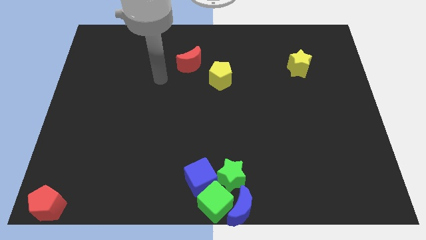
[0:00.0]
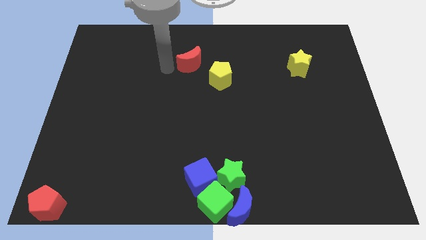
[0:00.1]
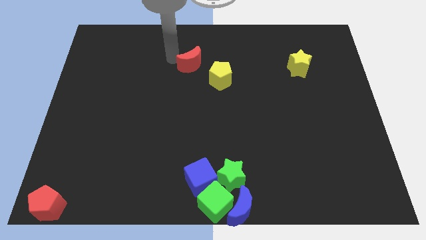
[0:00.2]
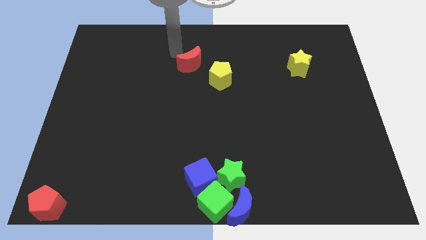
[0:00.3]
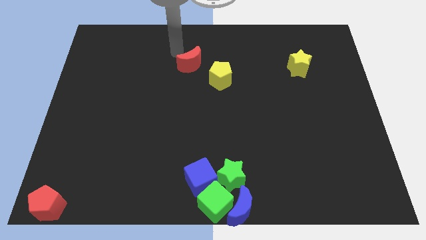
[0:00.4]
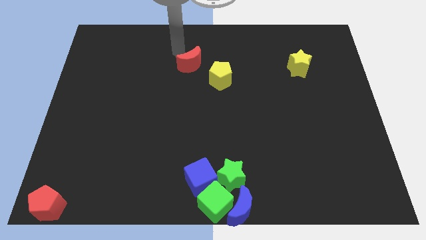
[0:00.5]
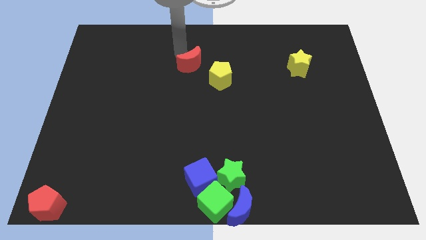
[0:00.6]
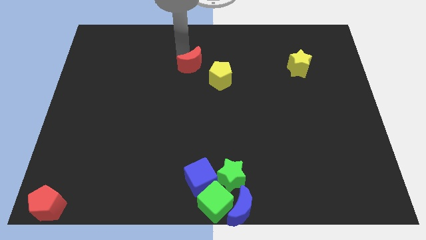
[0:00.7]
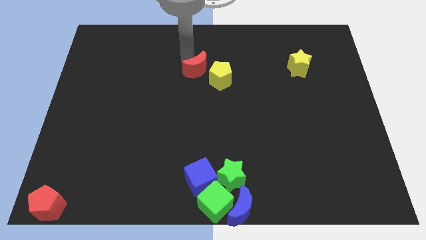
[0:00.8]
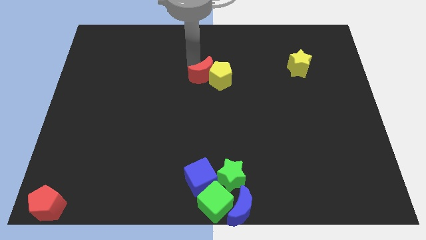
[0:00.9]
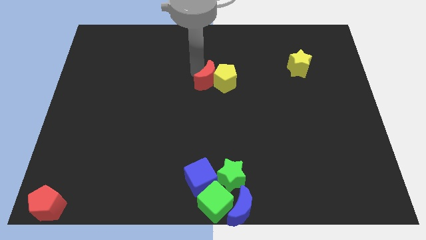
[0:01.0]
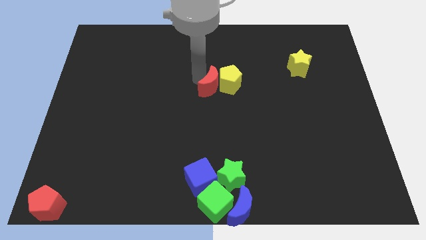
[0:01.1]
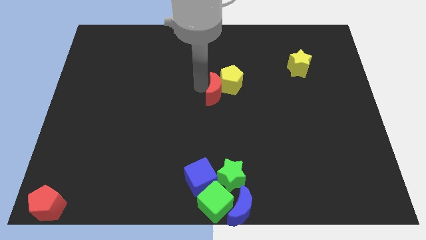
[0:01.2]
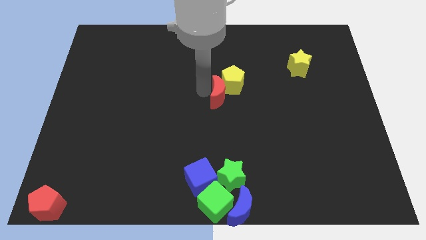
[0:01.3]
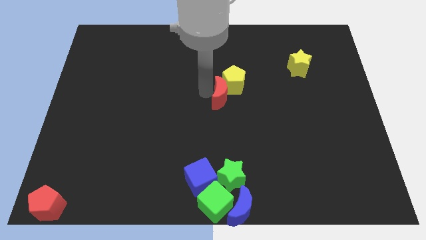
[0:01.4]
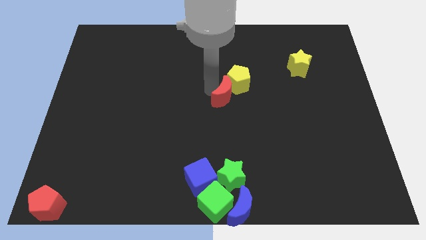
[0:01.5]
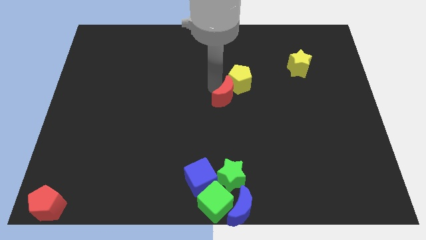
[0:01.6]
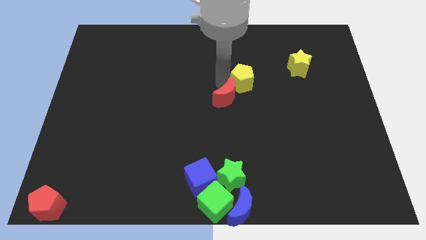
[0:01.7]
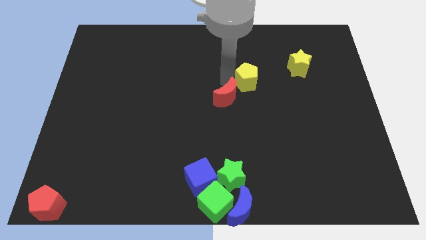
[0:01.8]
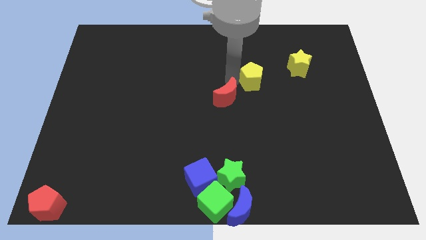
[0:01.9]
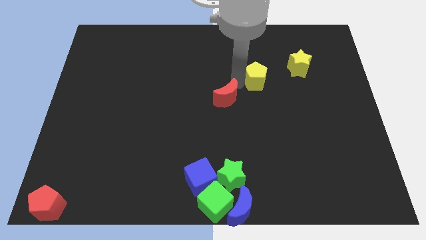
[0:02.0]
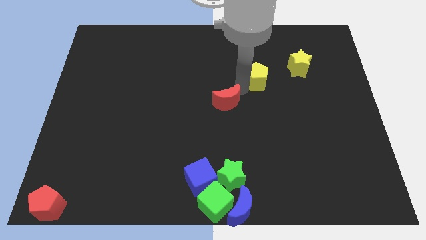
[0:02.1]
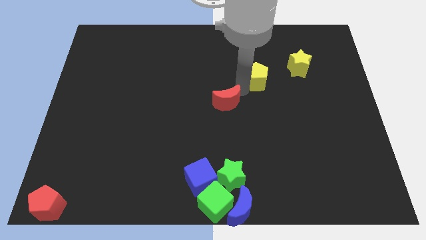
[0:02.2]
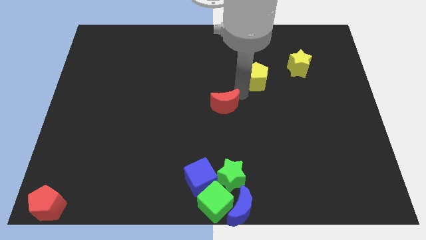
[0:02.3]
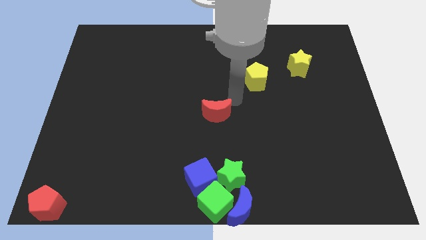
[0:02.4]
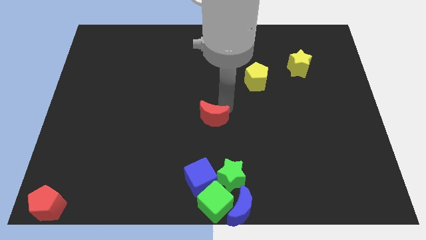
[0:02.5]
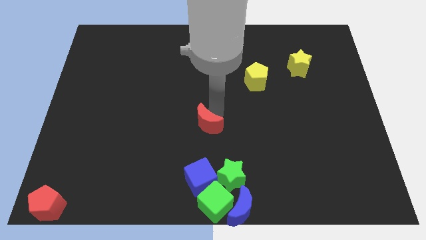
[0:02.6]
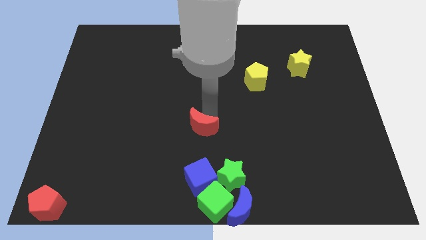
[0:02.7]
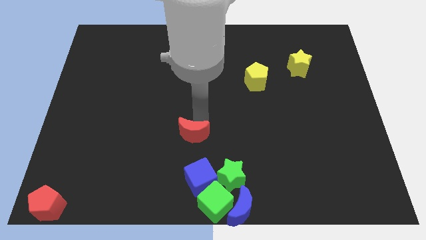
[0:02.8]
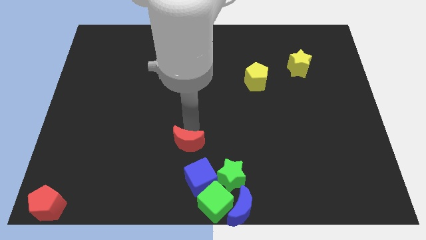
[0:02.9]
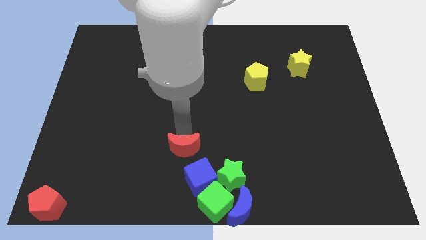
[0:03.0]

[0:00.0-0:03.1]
separate red moon from yellow pentagon

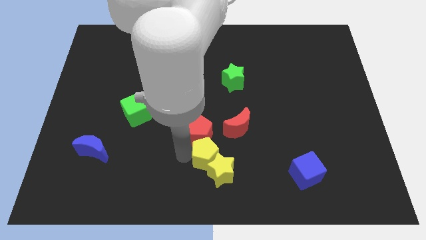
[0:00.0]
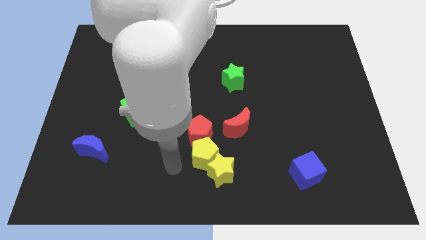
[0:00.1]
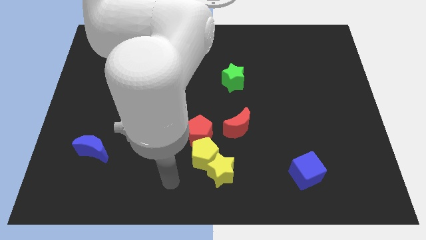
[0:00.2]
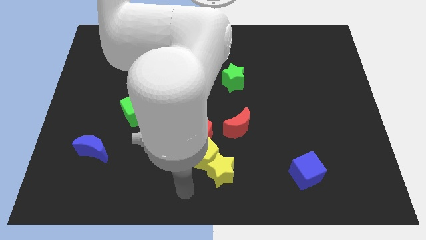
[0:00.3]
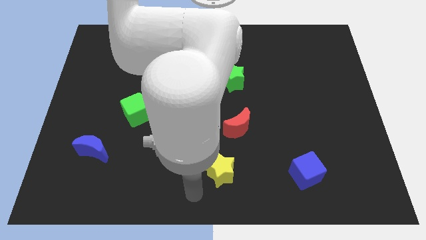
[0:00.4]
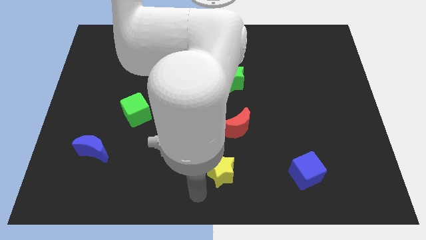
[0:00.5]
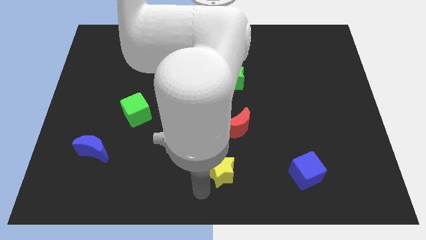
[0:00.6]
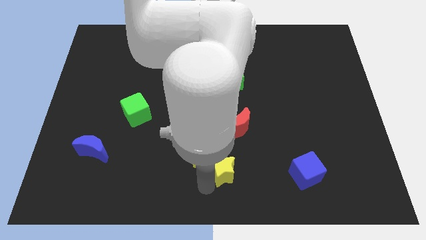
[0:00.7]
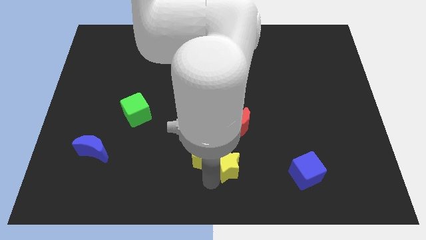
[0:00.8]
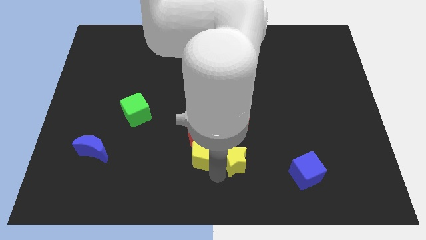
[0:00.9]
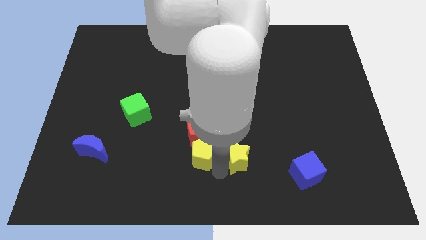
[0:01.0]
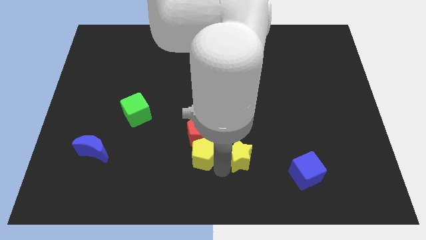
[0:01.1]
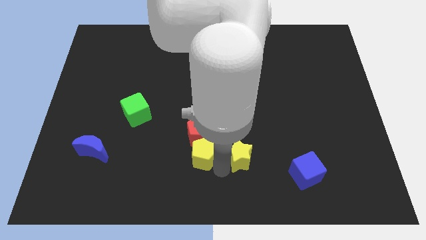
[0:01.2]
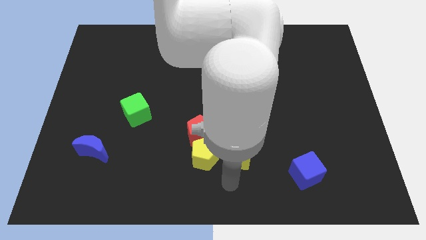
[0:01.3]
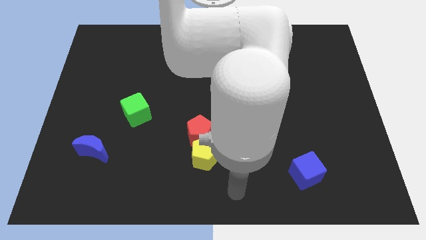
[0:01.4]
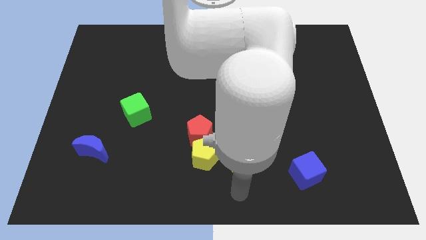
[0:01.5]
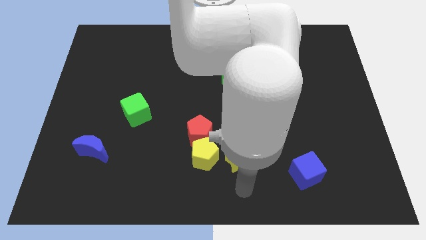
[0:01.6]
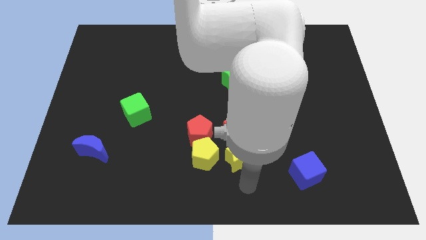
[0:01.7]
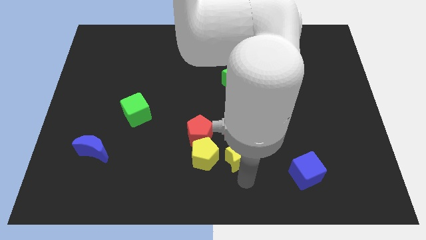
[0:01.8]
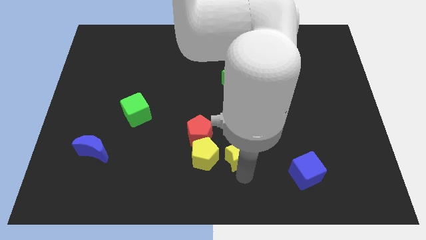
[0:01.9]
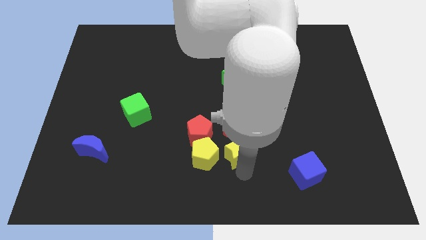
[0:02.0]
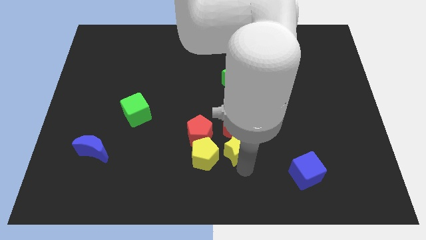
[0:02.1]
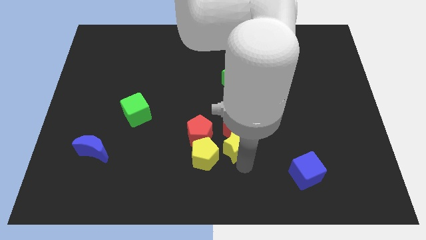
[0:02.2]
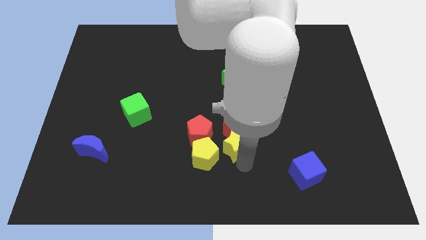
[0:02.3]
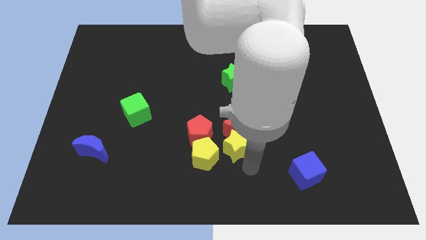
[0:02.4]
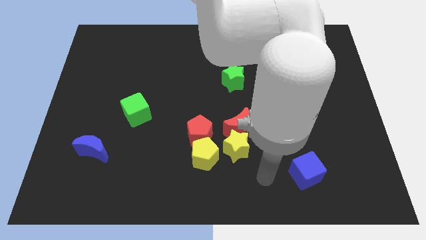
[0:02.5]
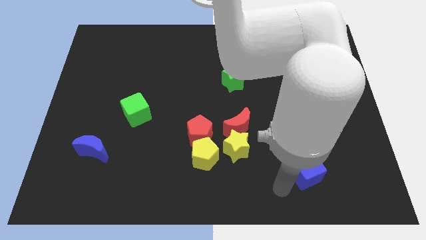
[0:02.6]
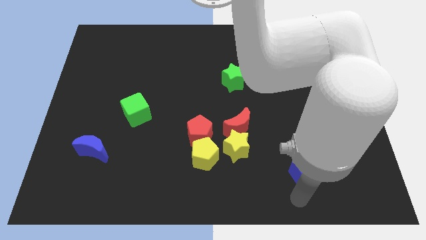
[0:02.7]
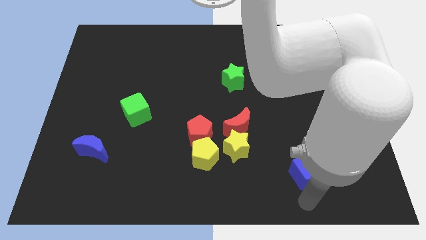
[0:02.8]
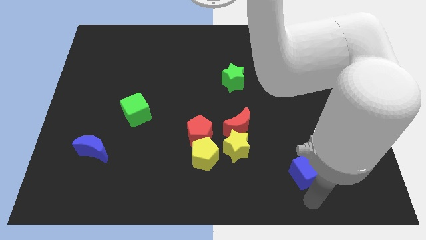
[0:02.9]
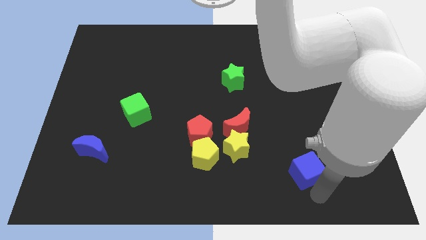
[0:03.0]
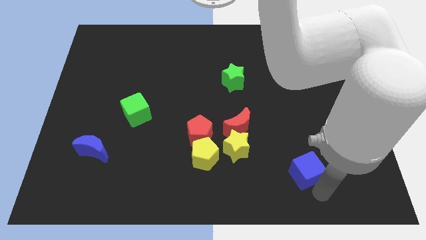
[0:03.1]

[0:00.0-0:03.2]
move the yellow star into the red crescent

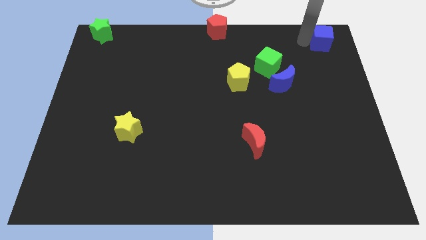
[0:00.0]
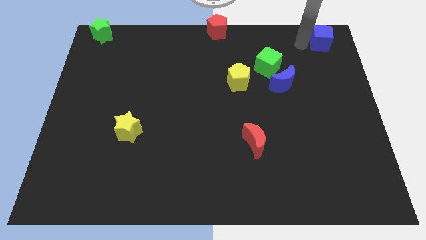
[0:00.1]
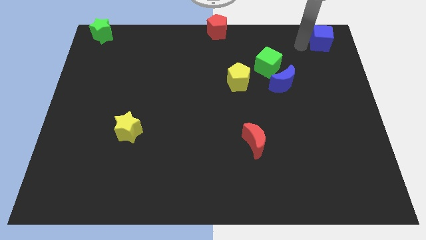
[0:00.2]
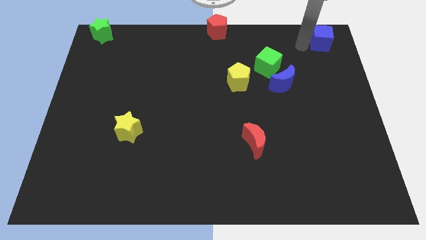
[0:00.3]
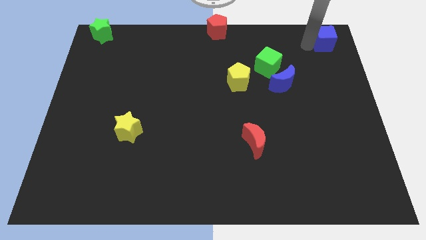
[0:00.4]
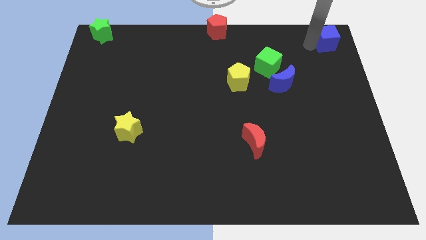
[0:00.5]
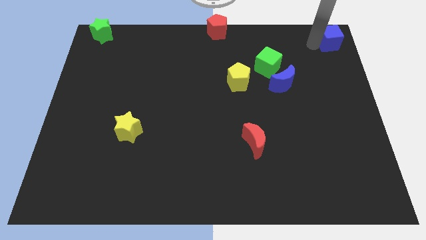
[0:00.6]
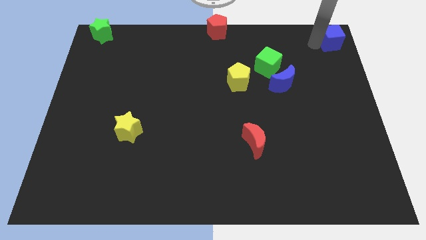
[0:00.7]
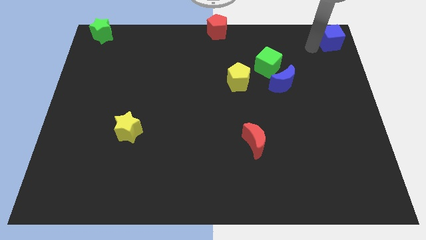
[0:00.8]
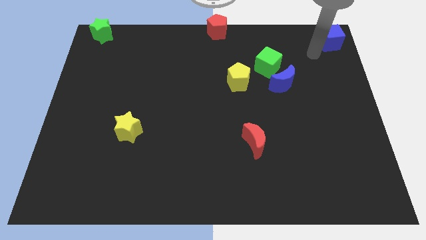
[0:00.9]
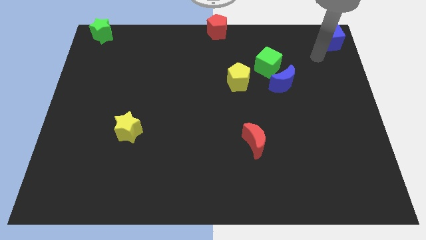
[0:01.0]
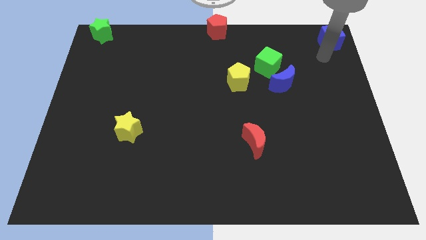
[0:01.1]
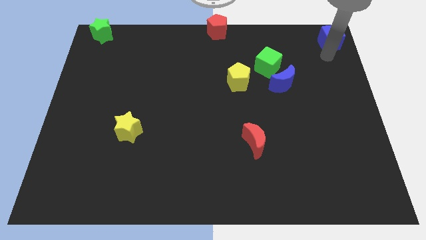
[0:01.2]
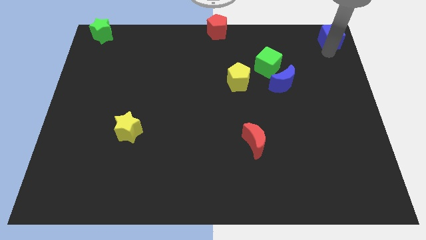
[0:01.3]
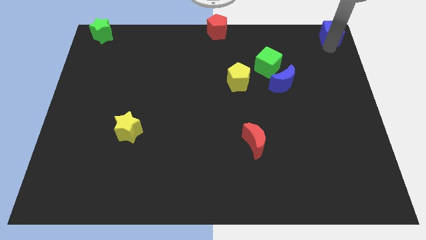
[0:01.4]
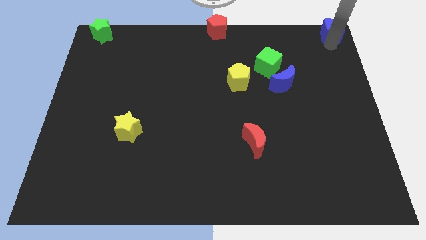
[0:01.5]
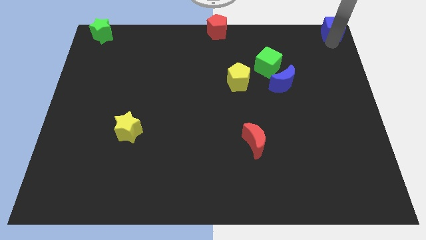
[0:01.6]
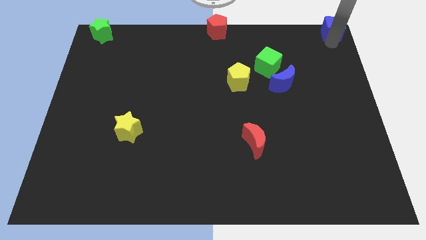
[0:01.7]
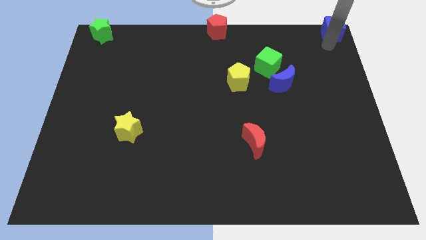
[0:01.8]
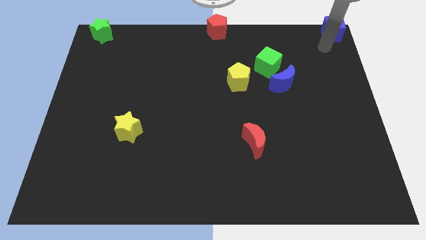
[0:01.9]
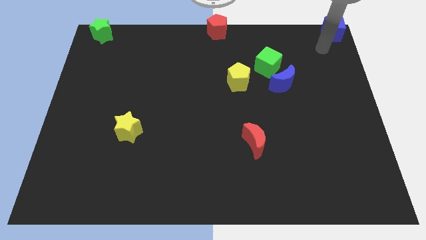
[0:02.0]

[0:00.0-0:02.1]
place the blue cube to the top right corner of the board

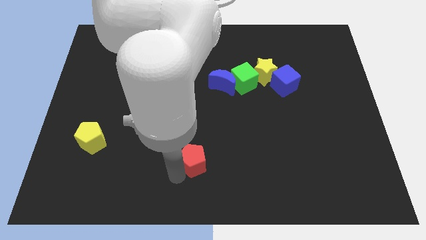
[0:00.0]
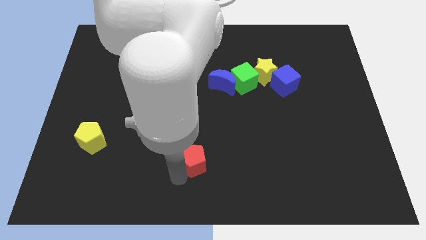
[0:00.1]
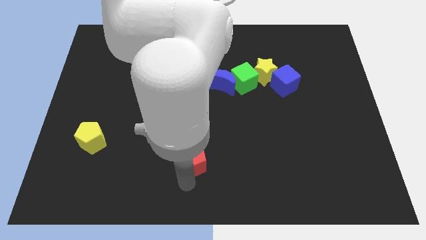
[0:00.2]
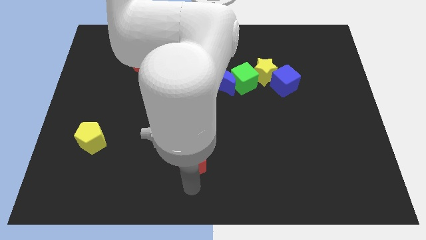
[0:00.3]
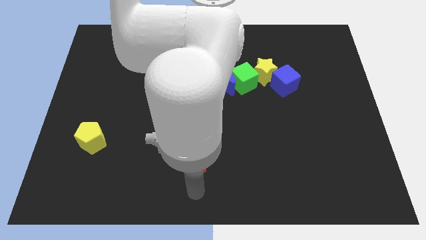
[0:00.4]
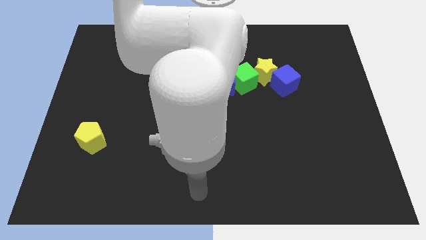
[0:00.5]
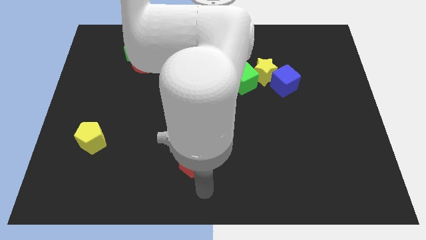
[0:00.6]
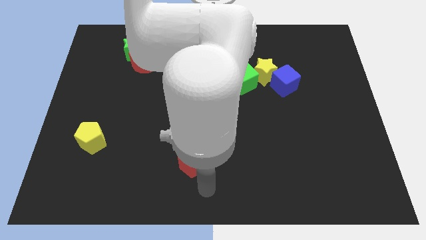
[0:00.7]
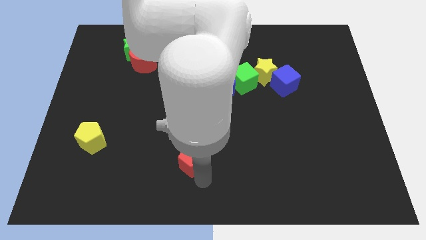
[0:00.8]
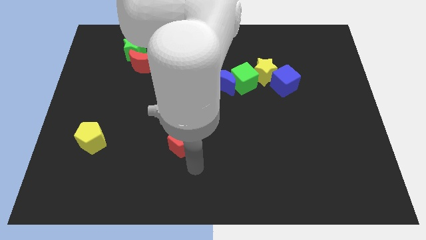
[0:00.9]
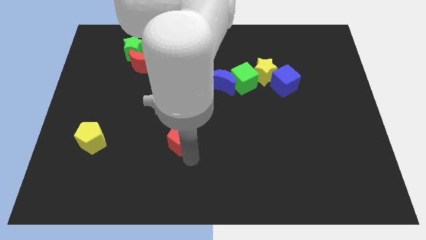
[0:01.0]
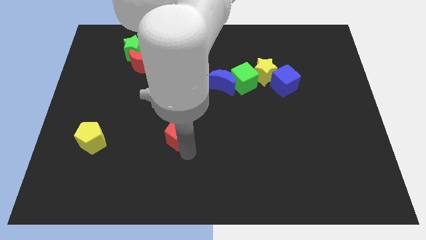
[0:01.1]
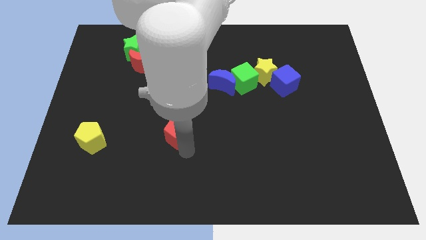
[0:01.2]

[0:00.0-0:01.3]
place red pentagon to the right of yellow pentagon
